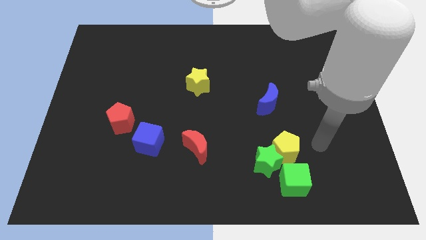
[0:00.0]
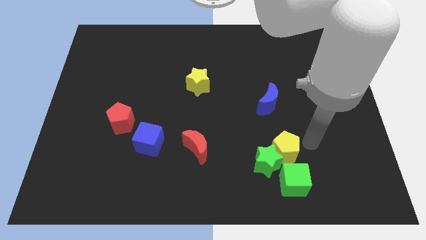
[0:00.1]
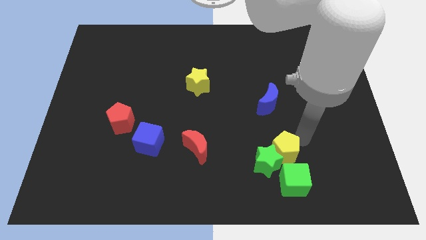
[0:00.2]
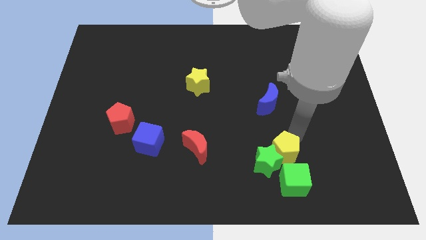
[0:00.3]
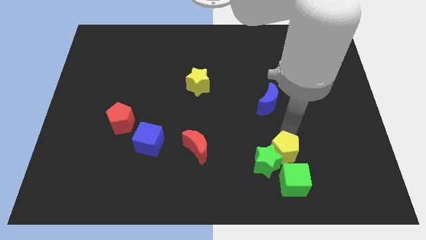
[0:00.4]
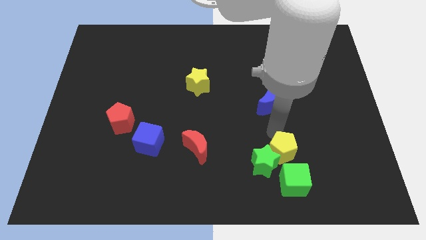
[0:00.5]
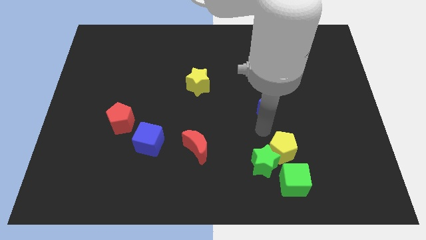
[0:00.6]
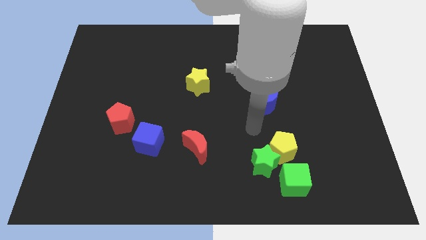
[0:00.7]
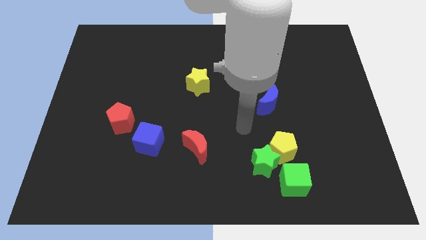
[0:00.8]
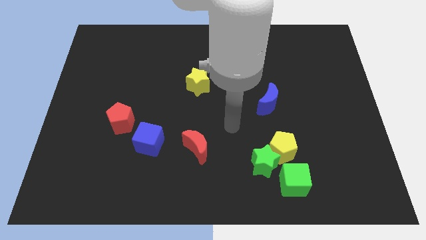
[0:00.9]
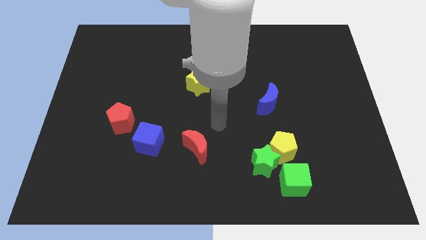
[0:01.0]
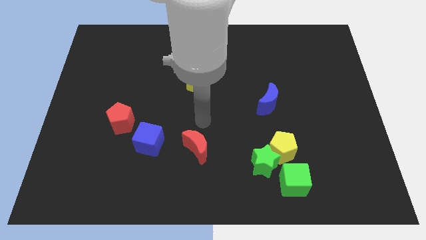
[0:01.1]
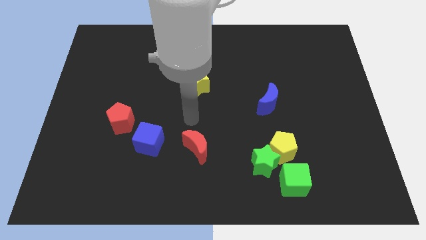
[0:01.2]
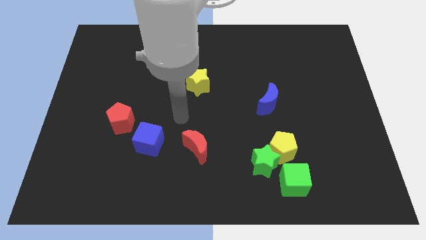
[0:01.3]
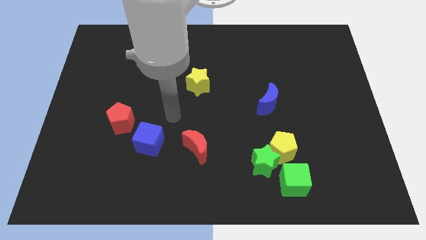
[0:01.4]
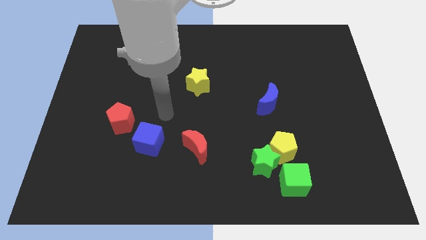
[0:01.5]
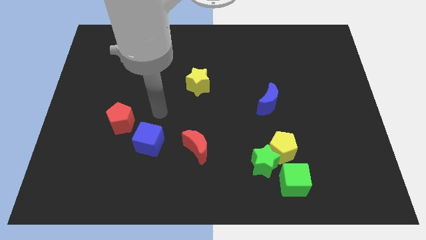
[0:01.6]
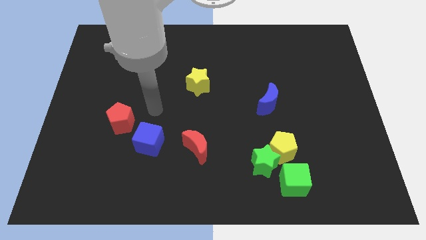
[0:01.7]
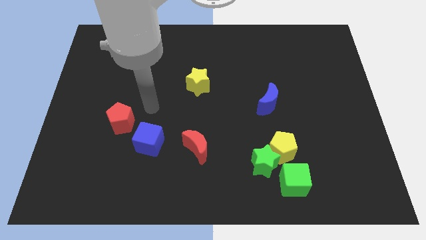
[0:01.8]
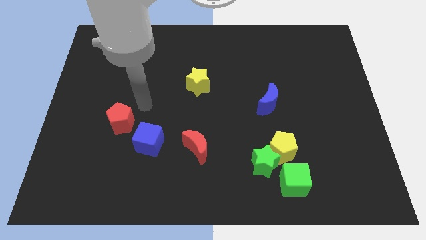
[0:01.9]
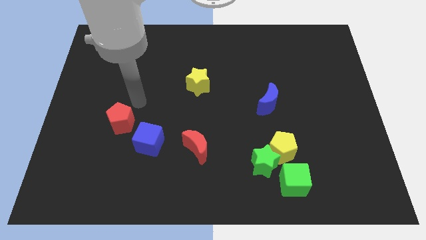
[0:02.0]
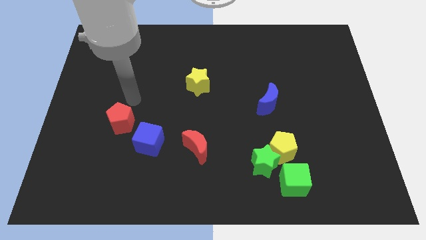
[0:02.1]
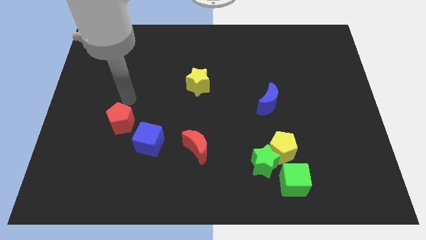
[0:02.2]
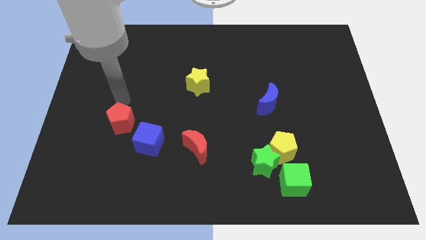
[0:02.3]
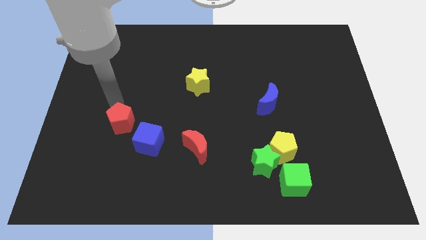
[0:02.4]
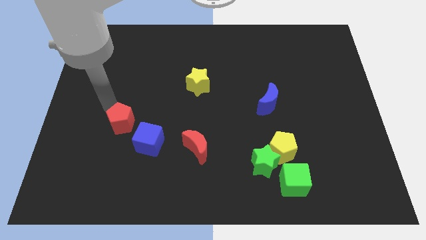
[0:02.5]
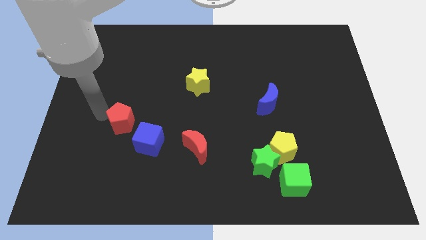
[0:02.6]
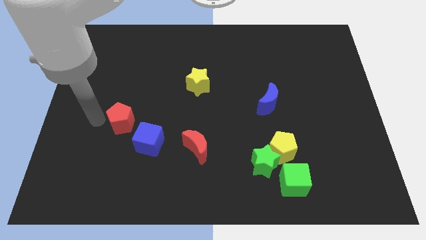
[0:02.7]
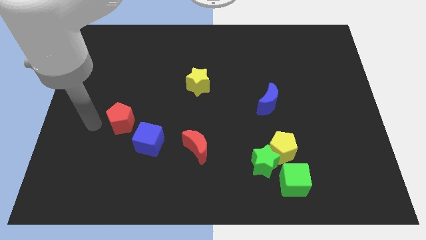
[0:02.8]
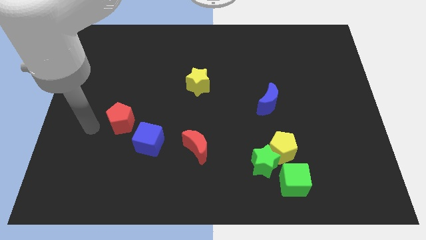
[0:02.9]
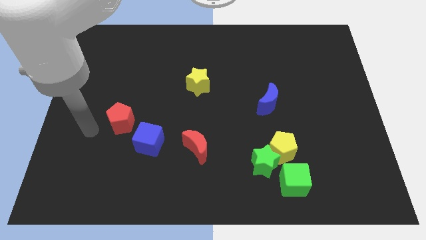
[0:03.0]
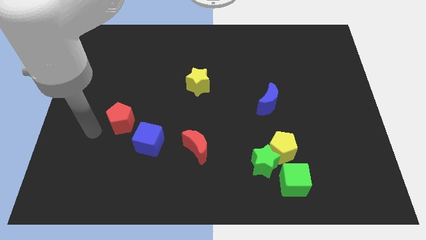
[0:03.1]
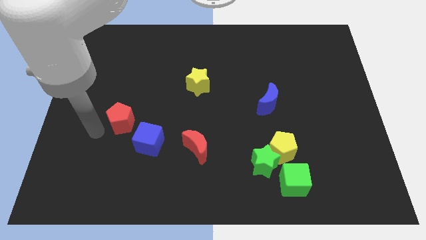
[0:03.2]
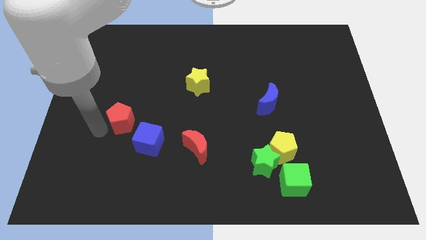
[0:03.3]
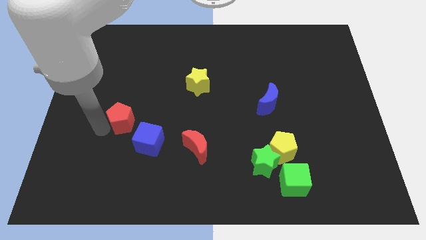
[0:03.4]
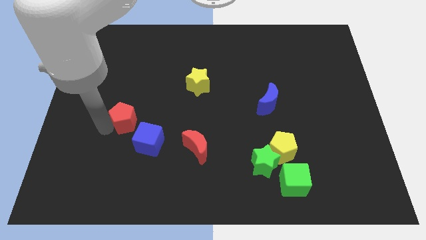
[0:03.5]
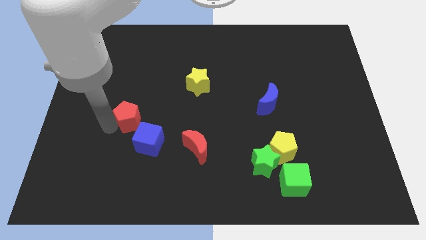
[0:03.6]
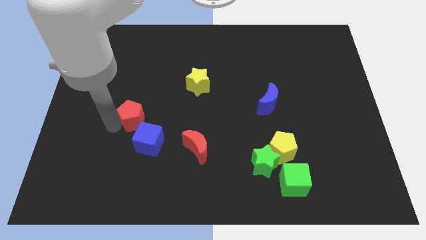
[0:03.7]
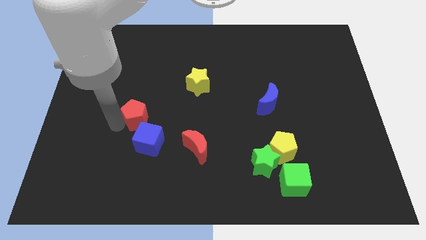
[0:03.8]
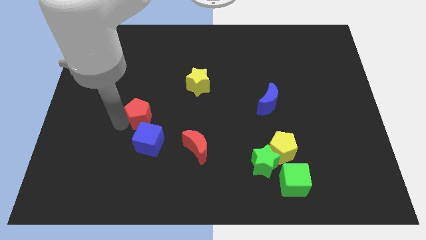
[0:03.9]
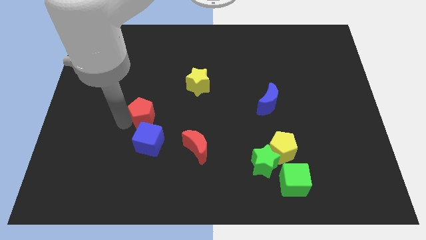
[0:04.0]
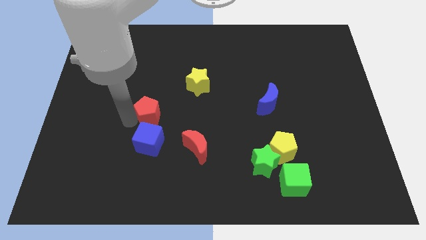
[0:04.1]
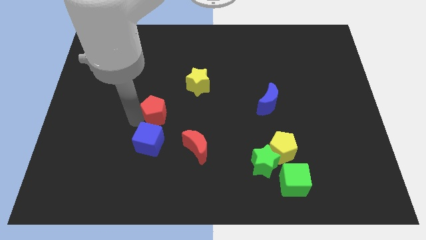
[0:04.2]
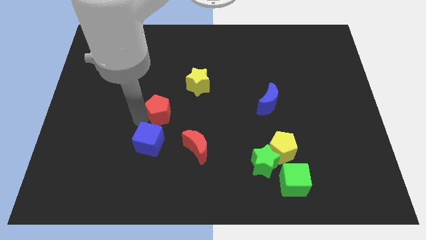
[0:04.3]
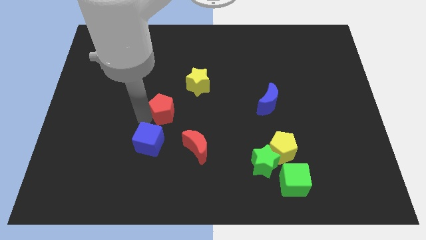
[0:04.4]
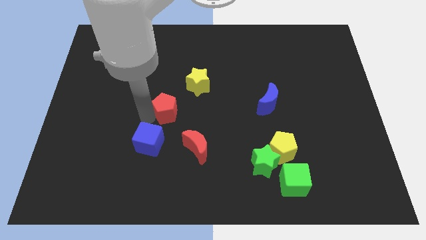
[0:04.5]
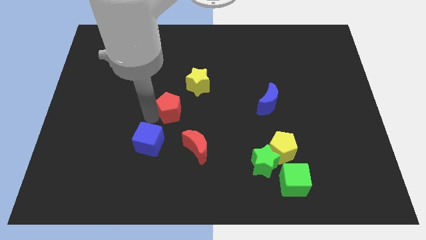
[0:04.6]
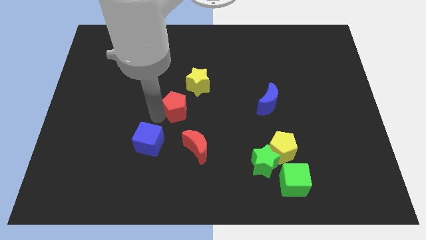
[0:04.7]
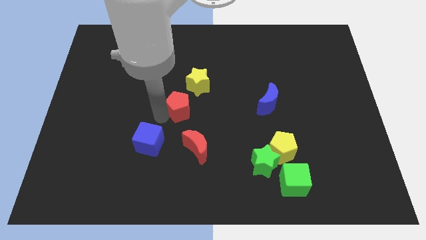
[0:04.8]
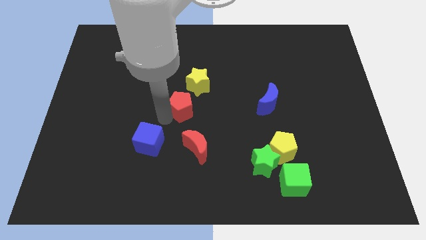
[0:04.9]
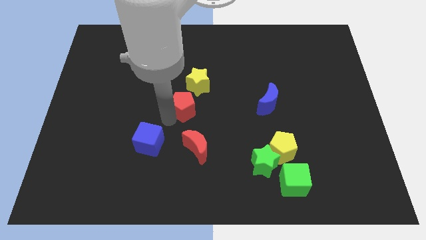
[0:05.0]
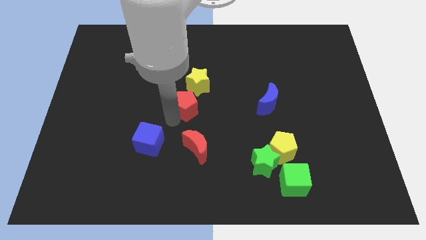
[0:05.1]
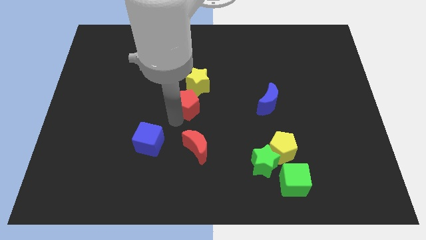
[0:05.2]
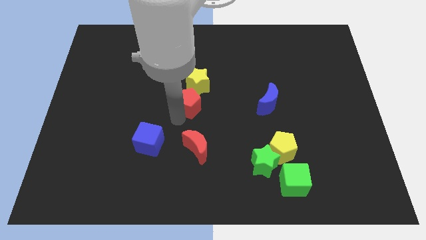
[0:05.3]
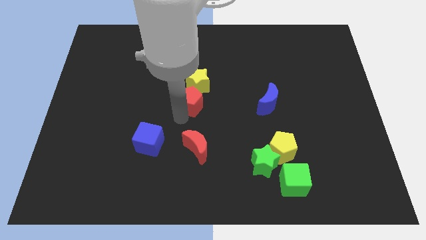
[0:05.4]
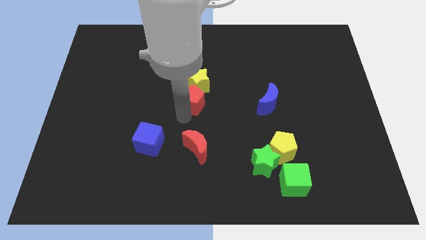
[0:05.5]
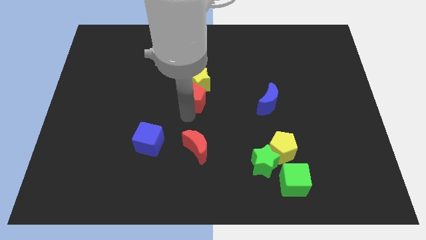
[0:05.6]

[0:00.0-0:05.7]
slide the red pentagon to the yellow star

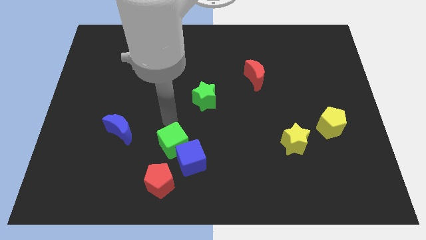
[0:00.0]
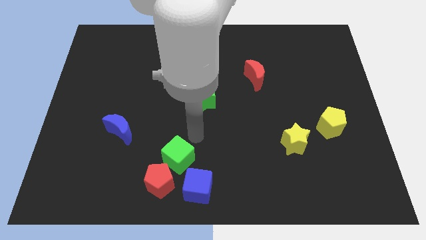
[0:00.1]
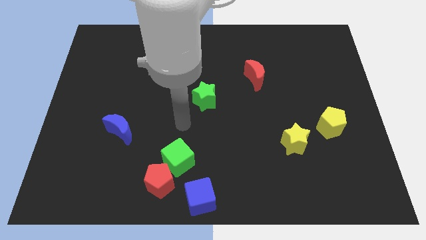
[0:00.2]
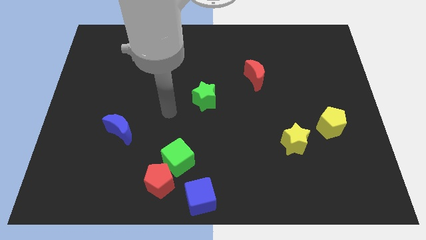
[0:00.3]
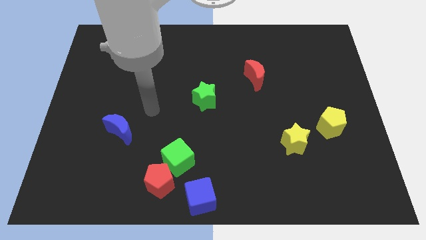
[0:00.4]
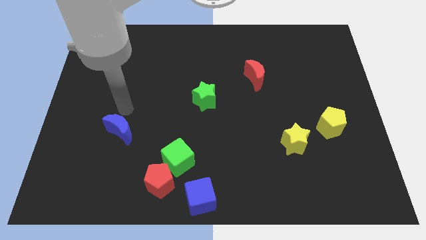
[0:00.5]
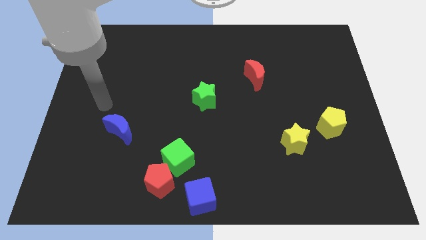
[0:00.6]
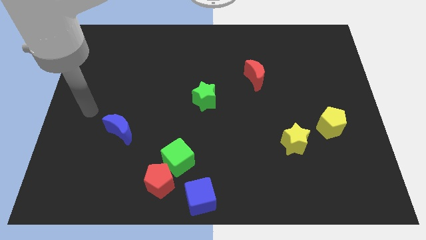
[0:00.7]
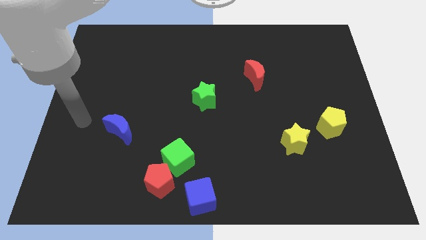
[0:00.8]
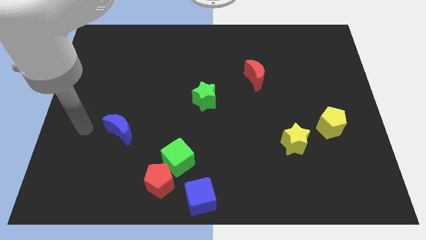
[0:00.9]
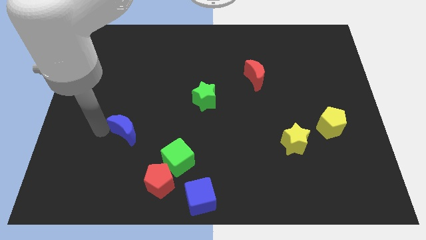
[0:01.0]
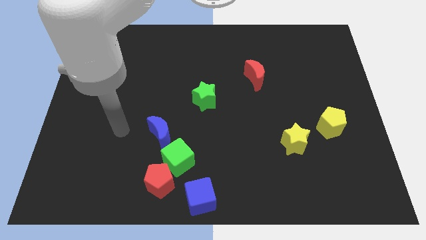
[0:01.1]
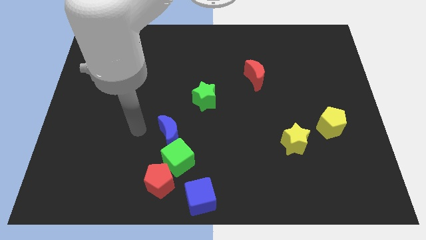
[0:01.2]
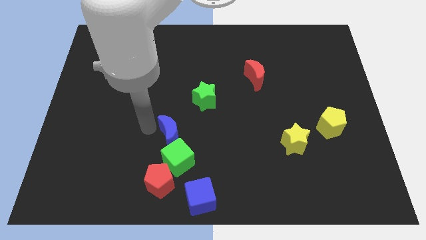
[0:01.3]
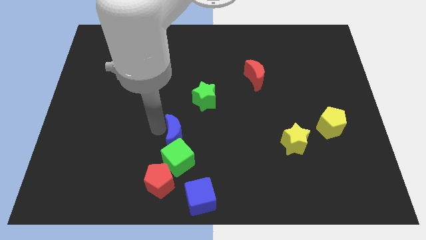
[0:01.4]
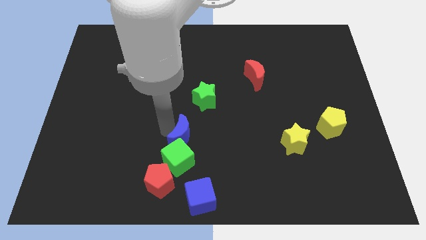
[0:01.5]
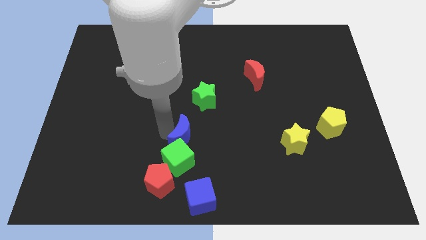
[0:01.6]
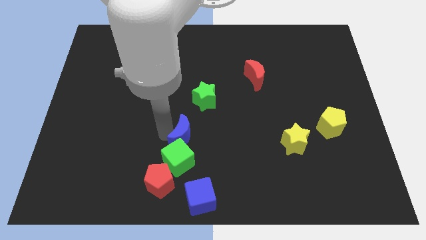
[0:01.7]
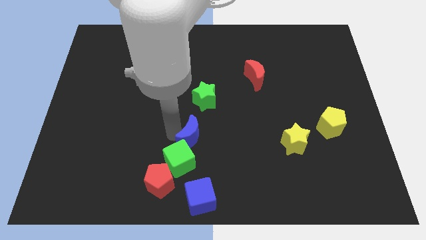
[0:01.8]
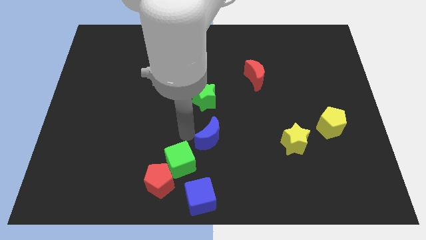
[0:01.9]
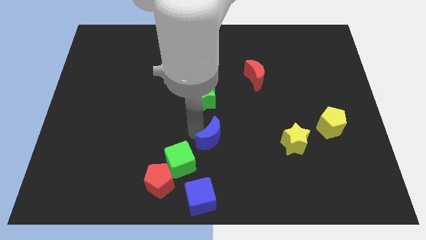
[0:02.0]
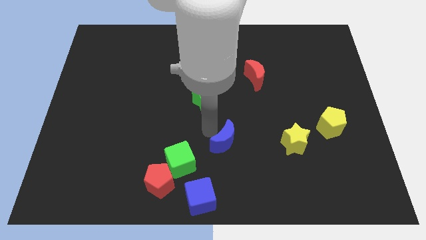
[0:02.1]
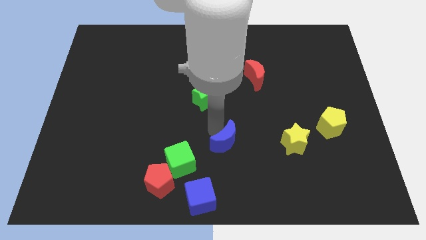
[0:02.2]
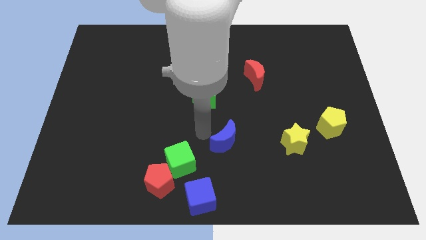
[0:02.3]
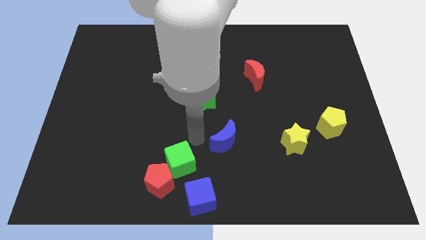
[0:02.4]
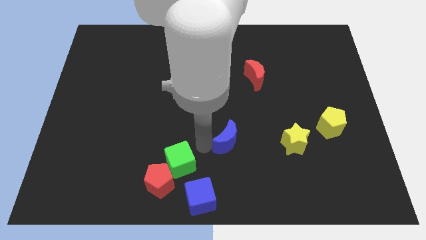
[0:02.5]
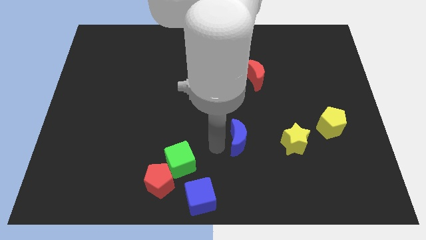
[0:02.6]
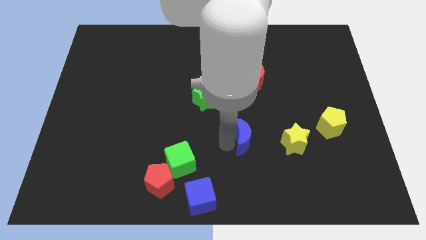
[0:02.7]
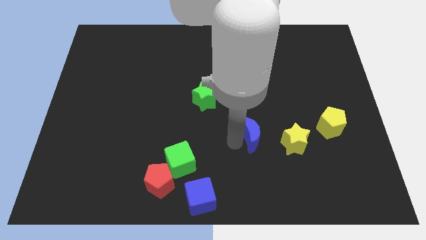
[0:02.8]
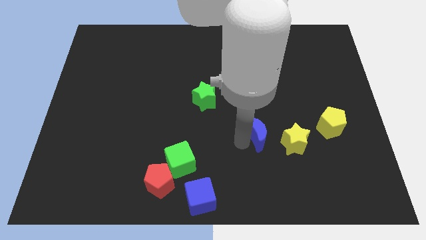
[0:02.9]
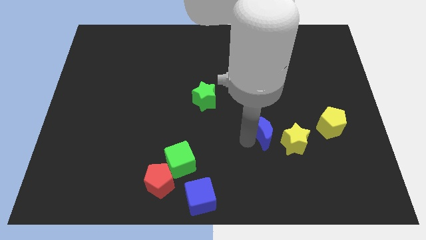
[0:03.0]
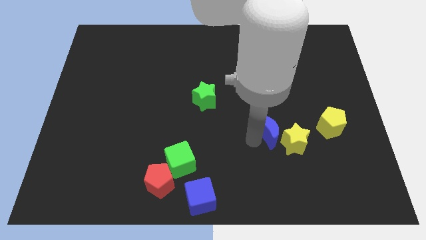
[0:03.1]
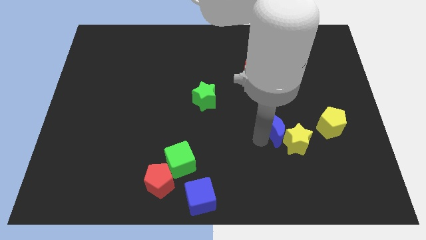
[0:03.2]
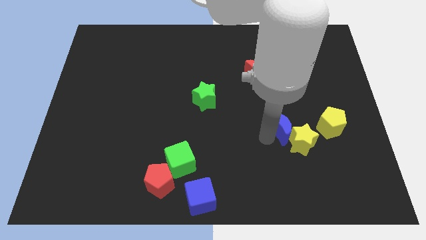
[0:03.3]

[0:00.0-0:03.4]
push the blue moon to the yellow star
